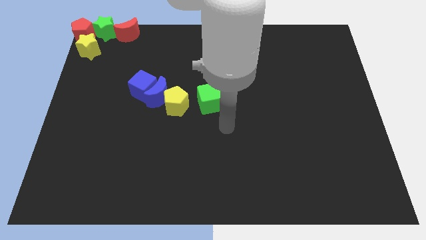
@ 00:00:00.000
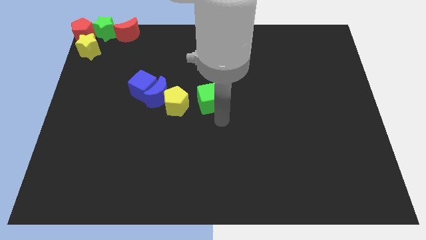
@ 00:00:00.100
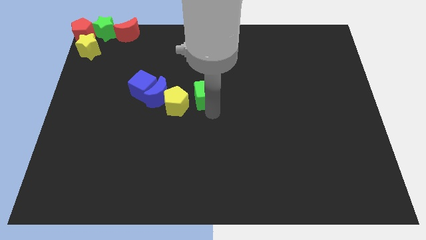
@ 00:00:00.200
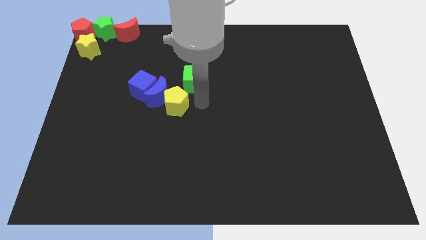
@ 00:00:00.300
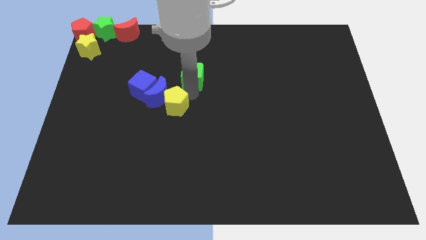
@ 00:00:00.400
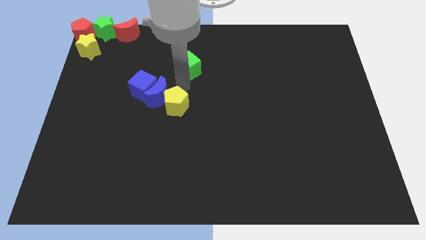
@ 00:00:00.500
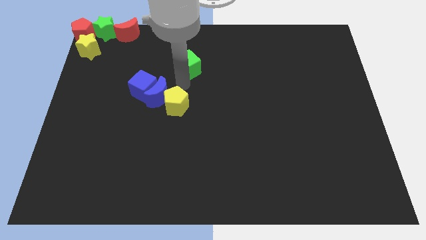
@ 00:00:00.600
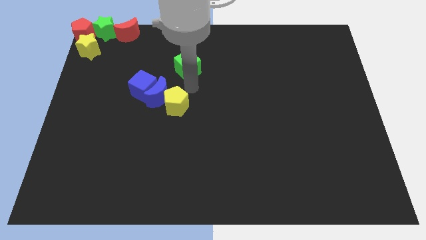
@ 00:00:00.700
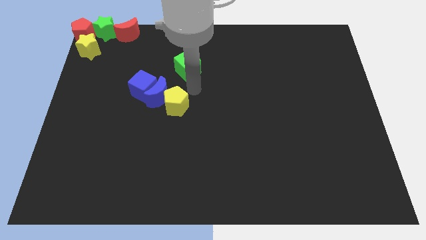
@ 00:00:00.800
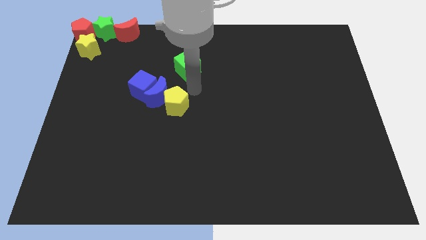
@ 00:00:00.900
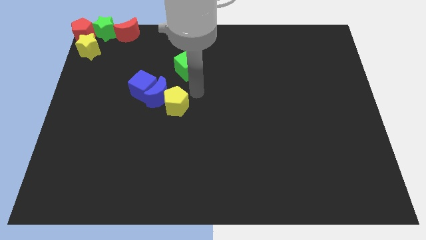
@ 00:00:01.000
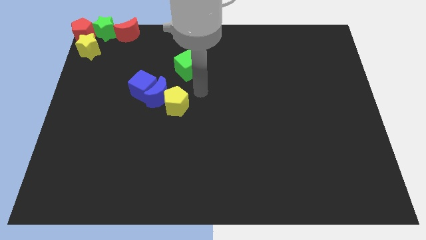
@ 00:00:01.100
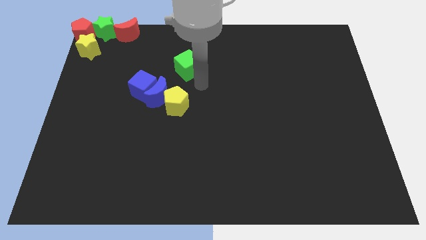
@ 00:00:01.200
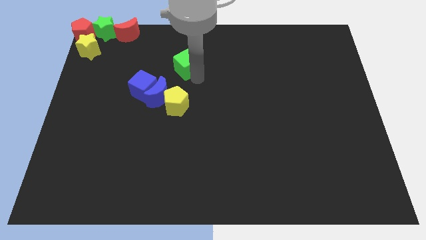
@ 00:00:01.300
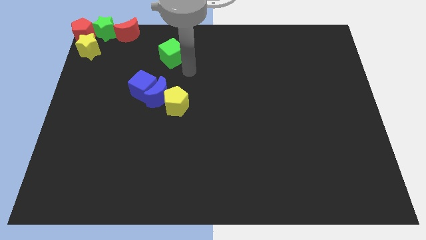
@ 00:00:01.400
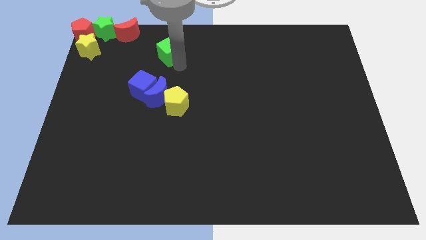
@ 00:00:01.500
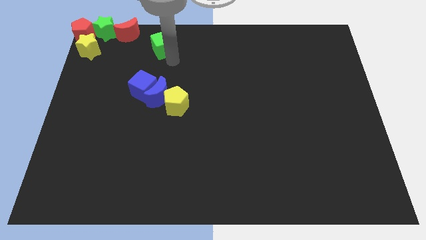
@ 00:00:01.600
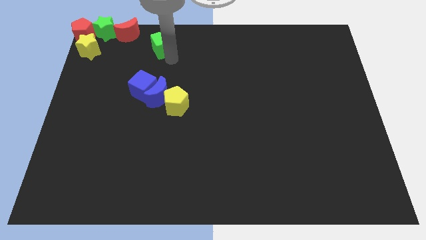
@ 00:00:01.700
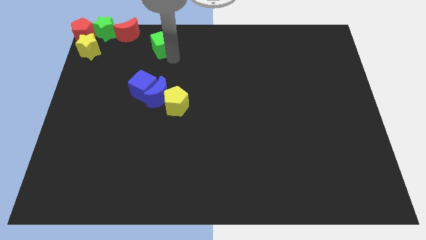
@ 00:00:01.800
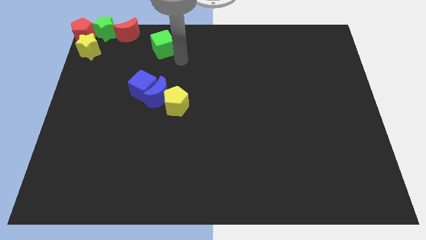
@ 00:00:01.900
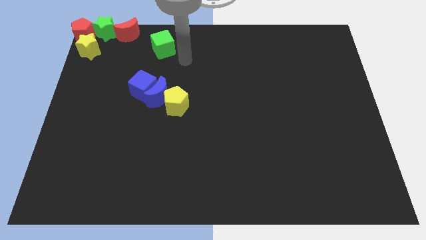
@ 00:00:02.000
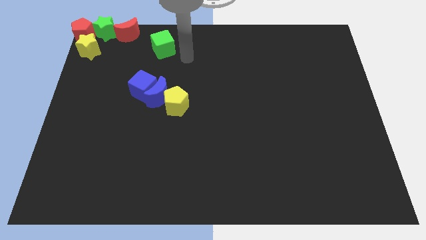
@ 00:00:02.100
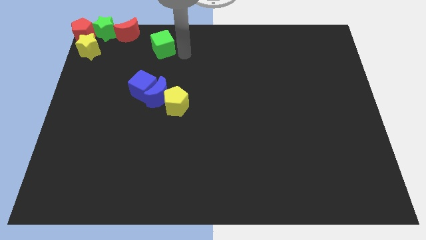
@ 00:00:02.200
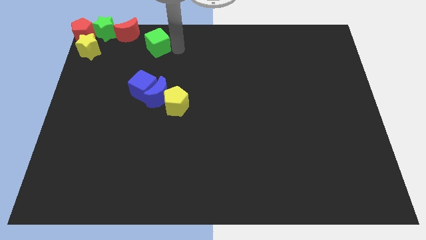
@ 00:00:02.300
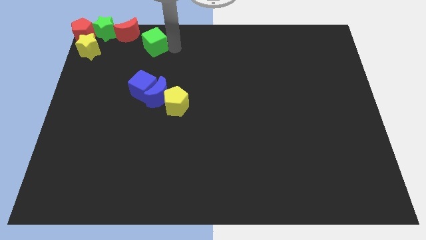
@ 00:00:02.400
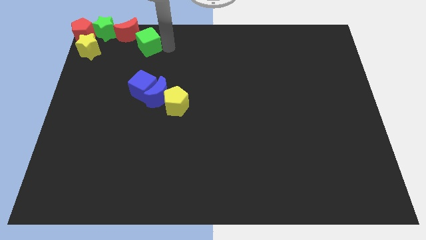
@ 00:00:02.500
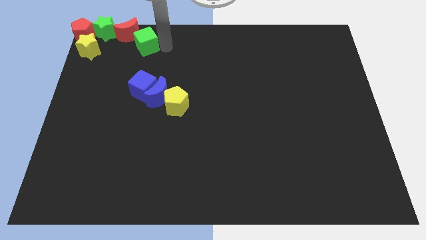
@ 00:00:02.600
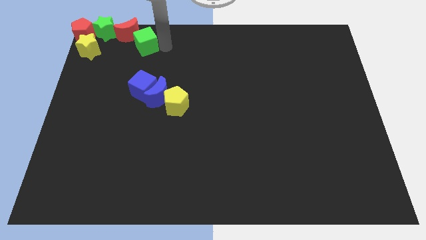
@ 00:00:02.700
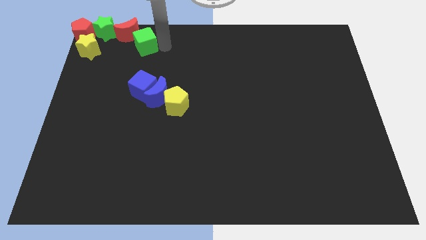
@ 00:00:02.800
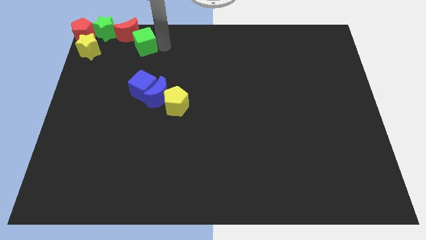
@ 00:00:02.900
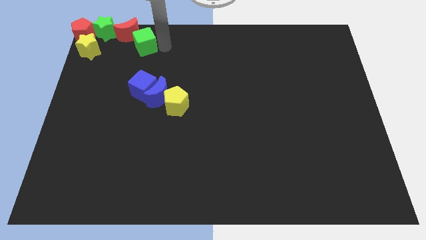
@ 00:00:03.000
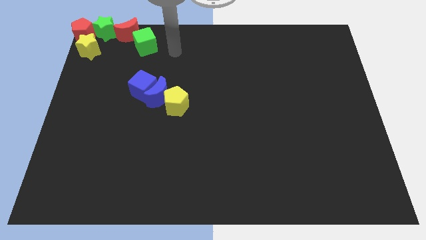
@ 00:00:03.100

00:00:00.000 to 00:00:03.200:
drag green cube near red moon

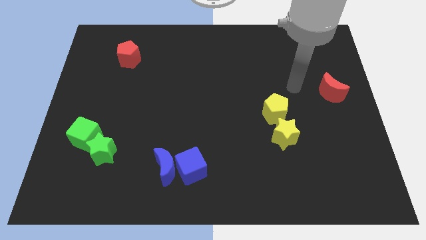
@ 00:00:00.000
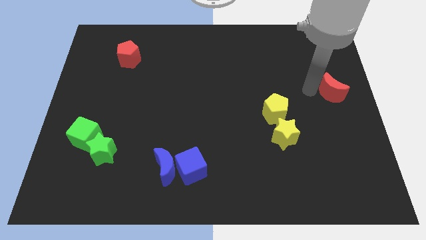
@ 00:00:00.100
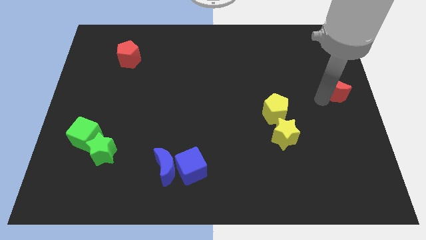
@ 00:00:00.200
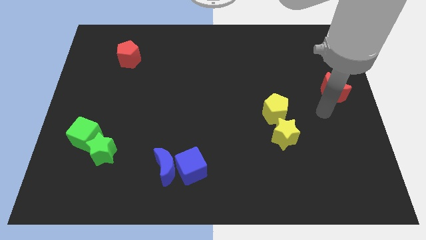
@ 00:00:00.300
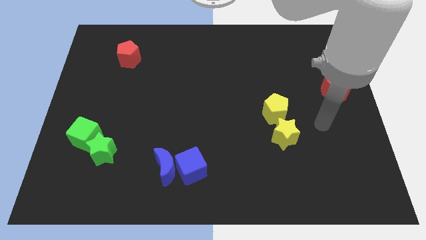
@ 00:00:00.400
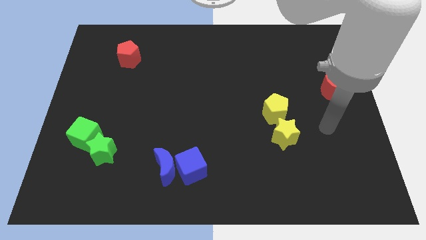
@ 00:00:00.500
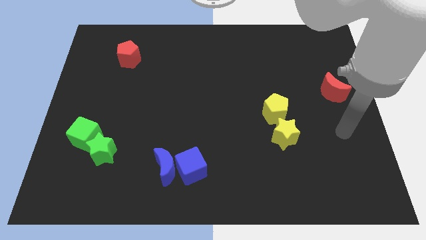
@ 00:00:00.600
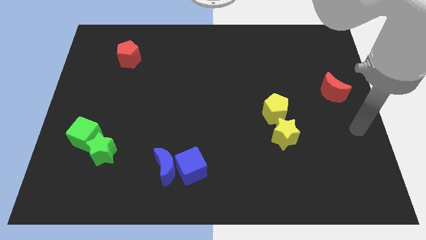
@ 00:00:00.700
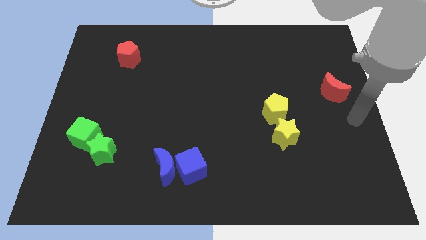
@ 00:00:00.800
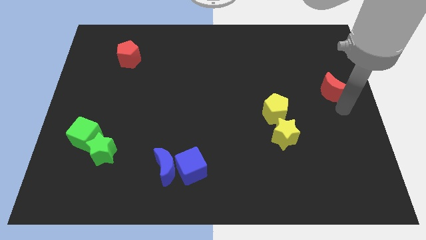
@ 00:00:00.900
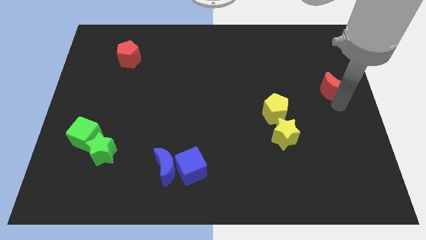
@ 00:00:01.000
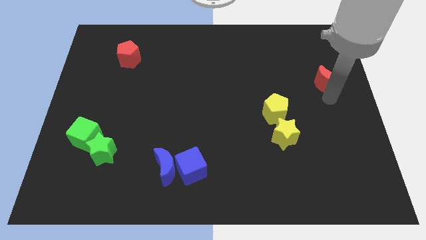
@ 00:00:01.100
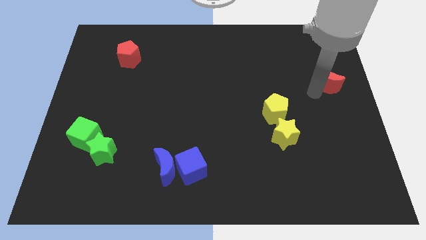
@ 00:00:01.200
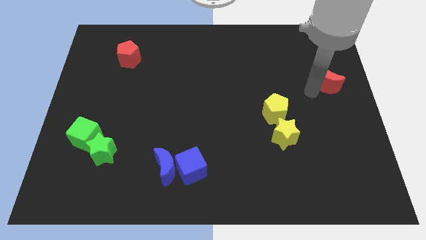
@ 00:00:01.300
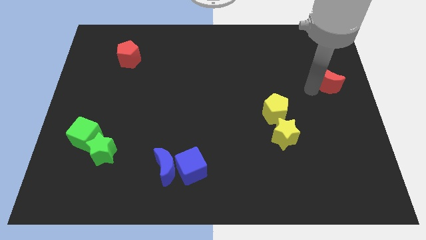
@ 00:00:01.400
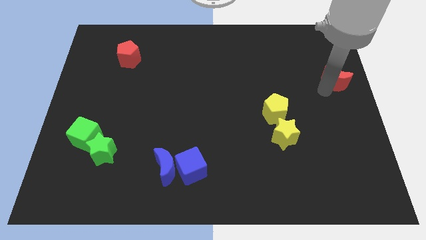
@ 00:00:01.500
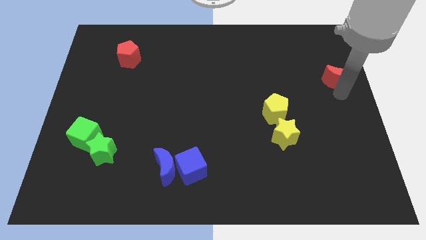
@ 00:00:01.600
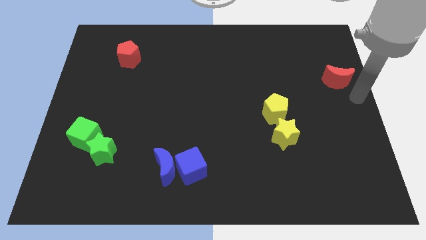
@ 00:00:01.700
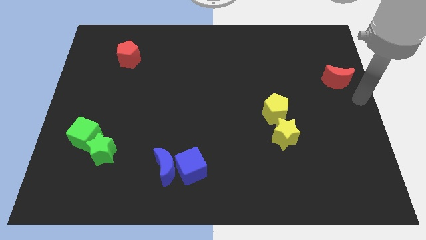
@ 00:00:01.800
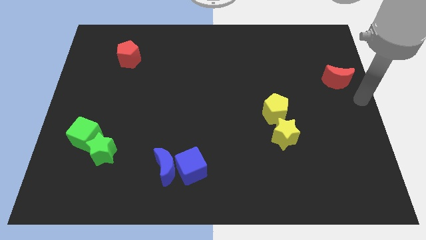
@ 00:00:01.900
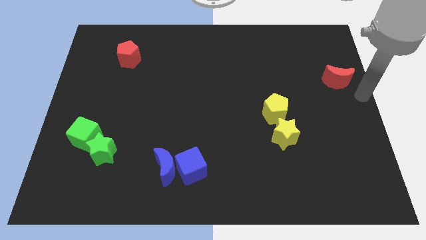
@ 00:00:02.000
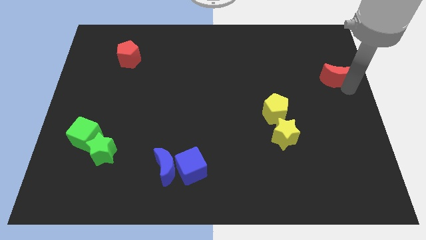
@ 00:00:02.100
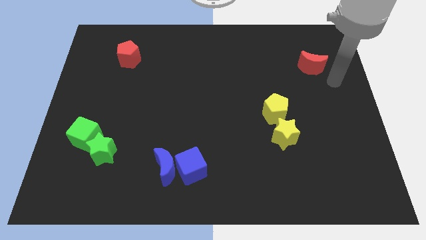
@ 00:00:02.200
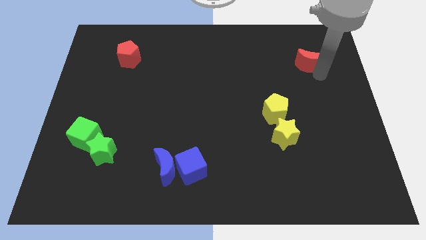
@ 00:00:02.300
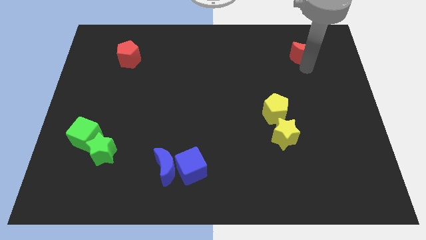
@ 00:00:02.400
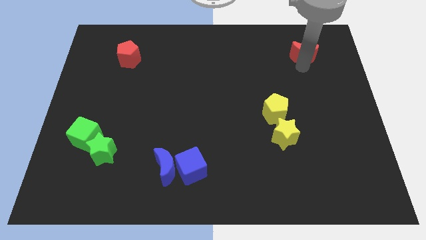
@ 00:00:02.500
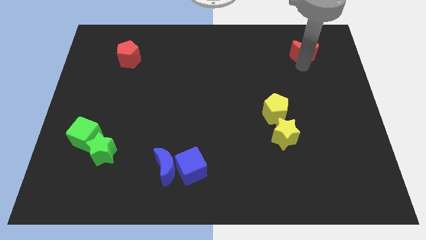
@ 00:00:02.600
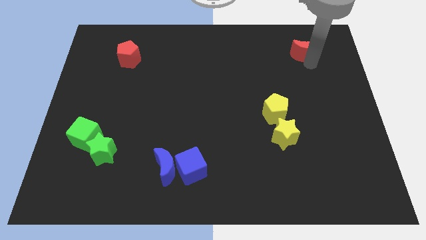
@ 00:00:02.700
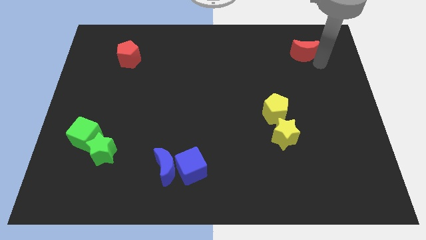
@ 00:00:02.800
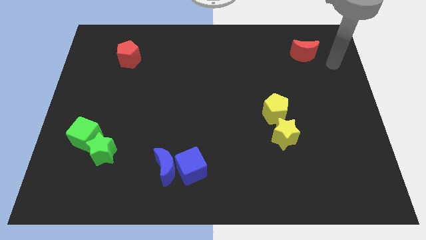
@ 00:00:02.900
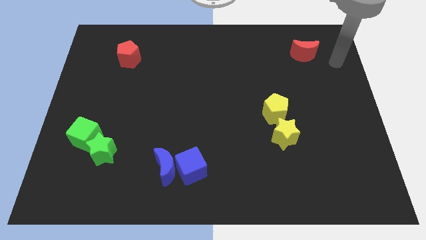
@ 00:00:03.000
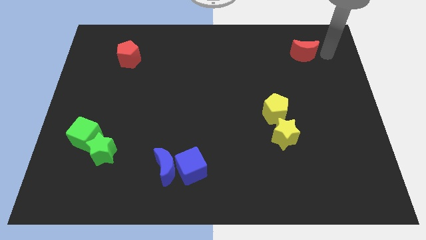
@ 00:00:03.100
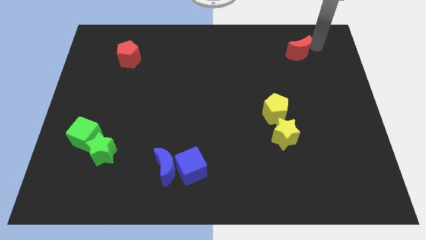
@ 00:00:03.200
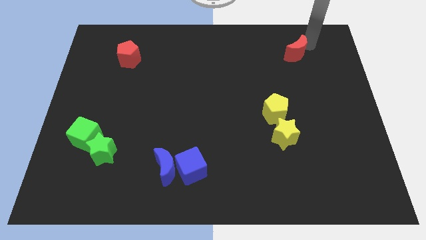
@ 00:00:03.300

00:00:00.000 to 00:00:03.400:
put the red crescent diagonally to the top right side of the yellow pentagon

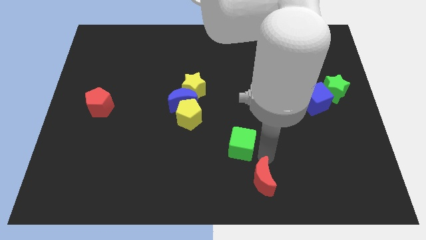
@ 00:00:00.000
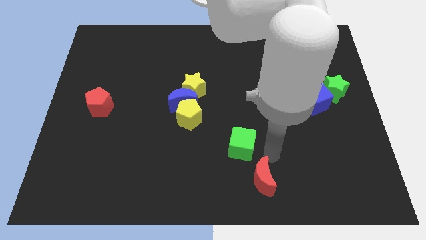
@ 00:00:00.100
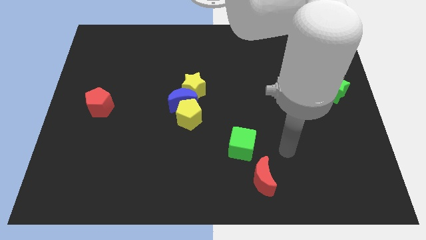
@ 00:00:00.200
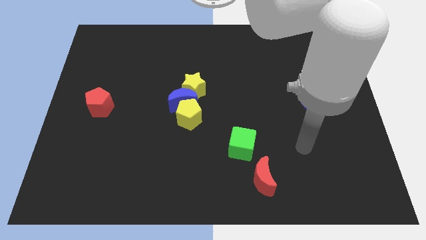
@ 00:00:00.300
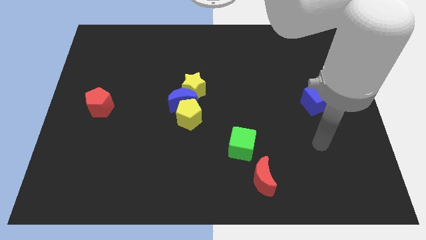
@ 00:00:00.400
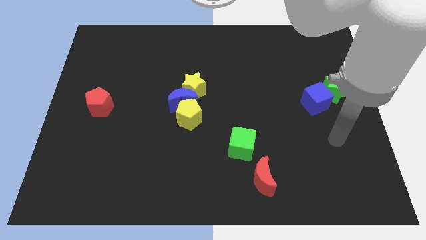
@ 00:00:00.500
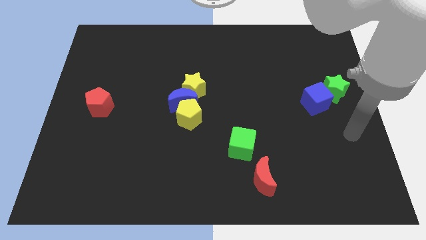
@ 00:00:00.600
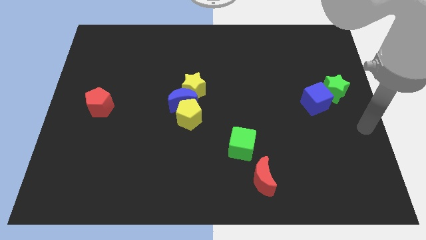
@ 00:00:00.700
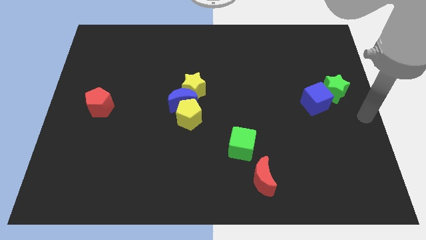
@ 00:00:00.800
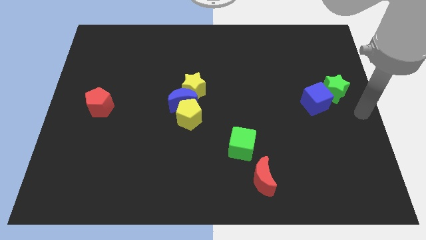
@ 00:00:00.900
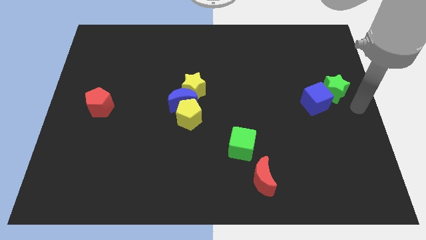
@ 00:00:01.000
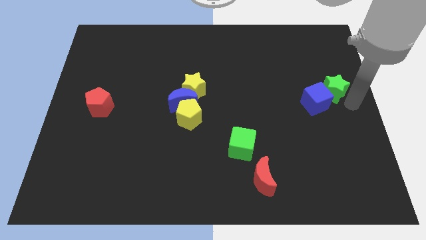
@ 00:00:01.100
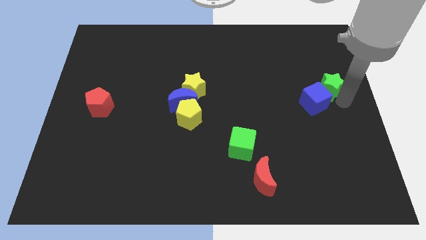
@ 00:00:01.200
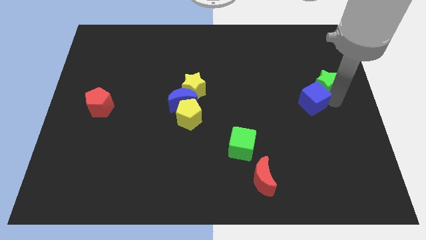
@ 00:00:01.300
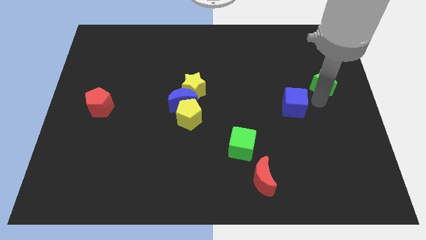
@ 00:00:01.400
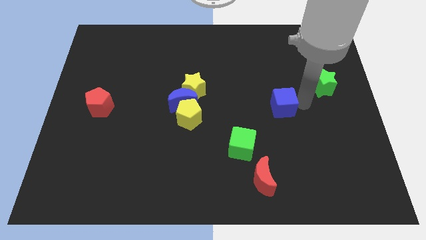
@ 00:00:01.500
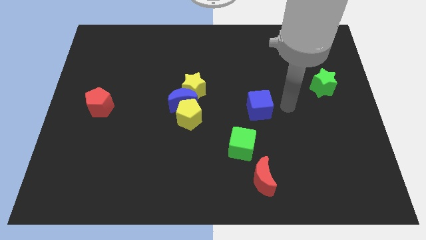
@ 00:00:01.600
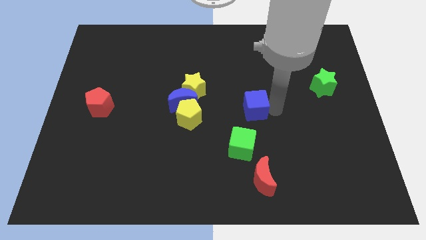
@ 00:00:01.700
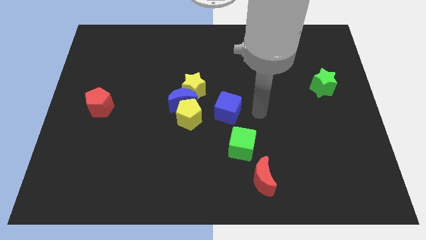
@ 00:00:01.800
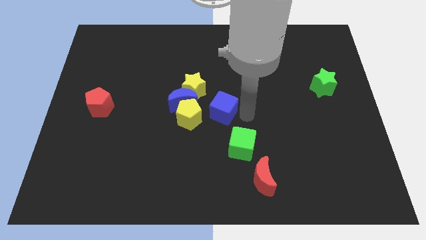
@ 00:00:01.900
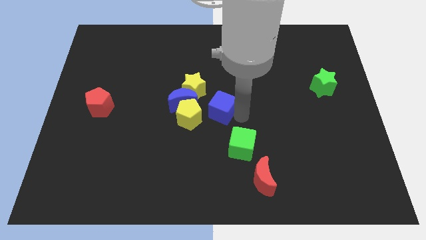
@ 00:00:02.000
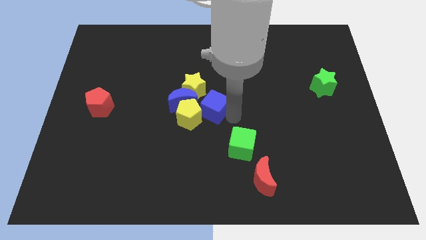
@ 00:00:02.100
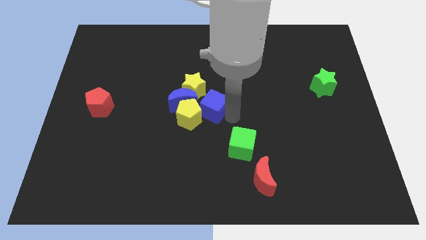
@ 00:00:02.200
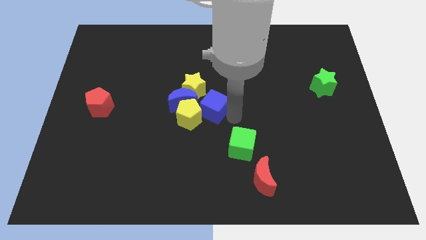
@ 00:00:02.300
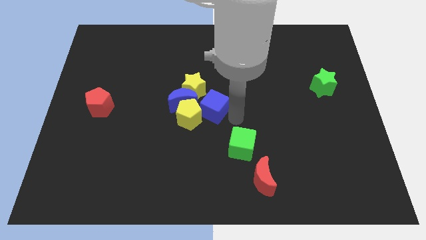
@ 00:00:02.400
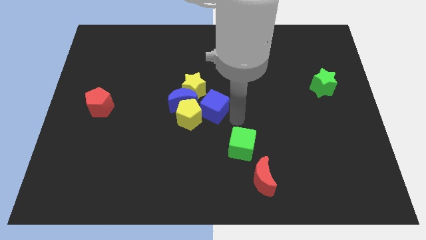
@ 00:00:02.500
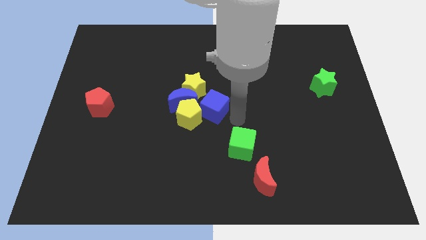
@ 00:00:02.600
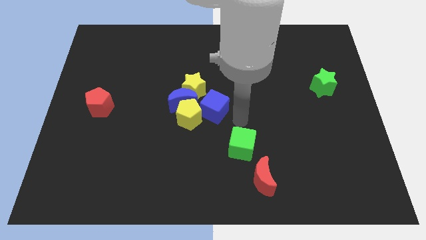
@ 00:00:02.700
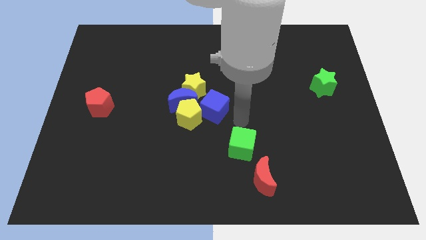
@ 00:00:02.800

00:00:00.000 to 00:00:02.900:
push the blue cube into the blue crescent
